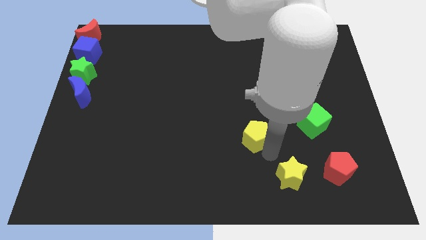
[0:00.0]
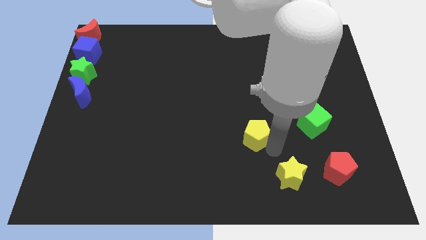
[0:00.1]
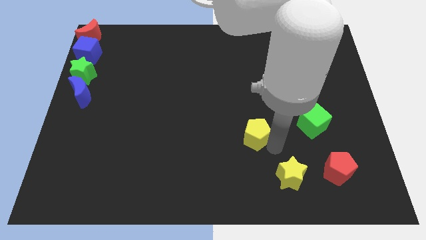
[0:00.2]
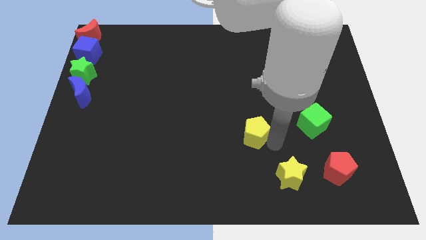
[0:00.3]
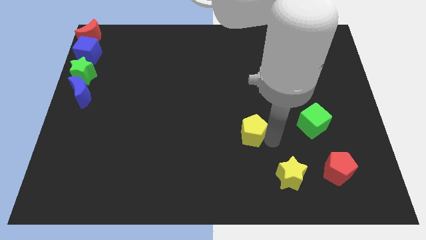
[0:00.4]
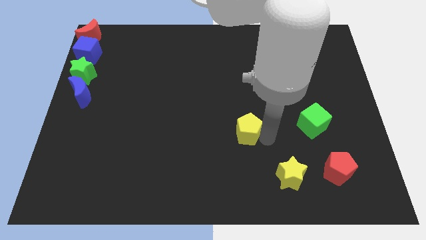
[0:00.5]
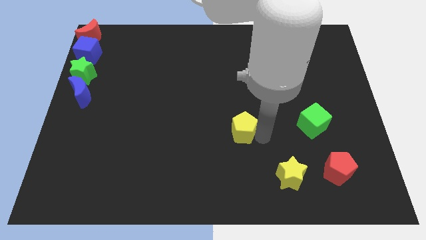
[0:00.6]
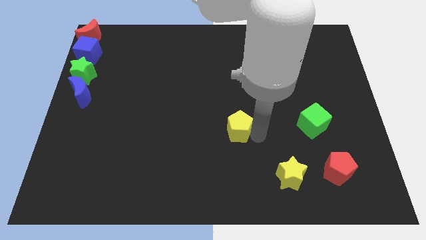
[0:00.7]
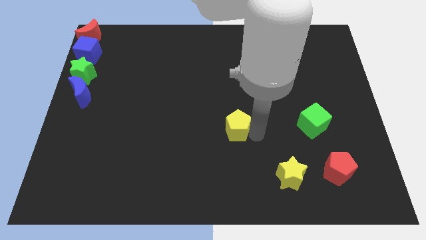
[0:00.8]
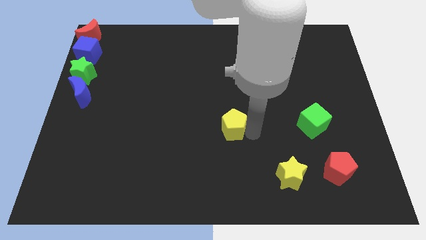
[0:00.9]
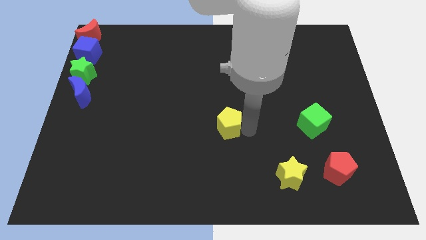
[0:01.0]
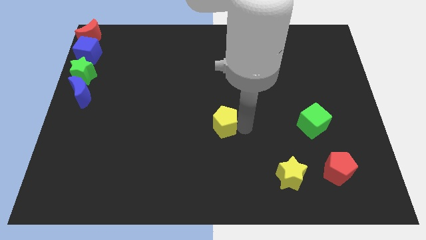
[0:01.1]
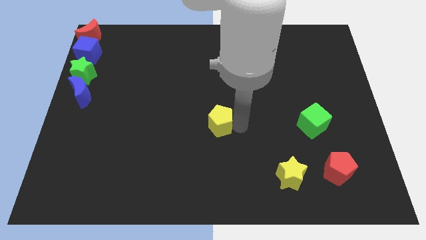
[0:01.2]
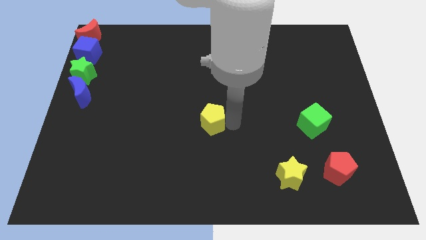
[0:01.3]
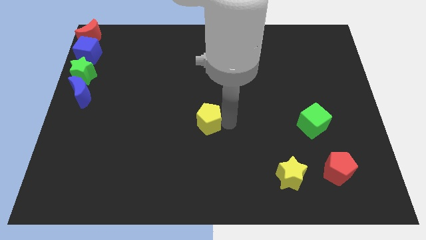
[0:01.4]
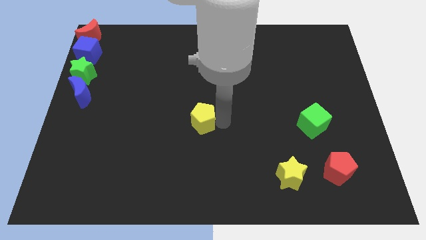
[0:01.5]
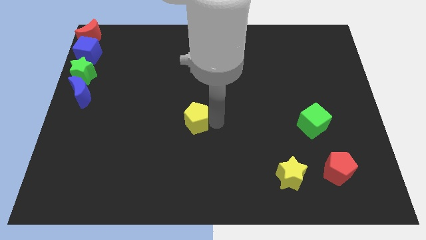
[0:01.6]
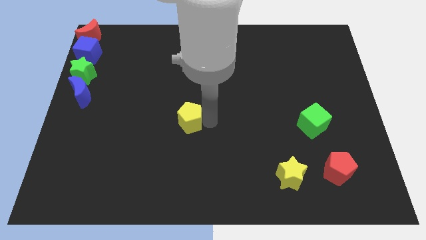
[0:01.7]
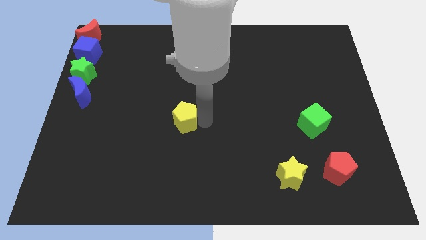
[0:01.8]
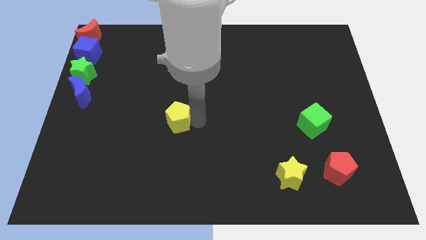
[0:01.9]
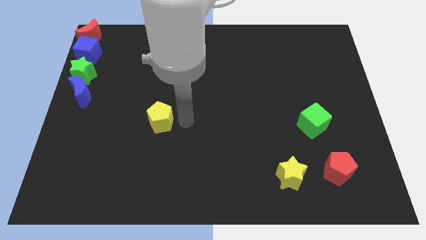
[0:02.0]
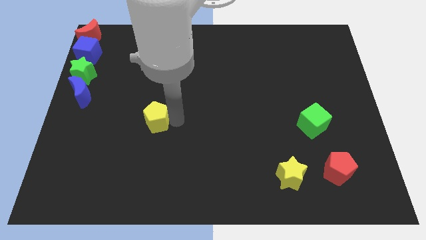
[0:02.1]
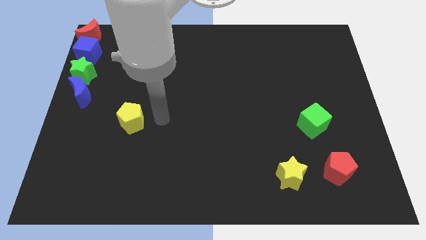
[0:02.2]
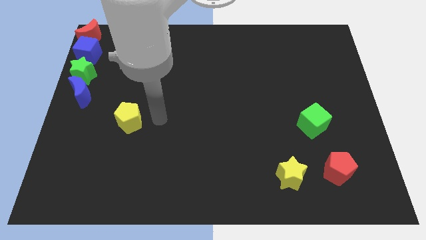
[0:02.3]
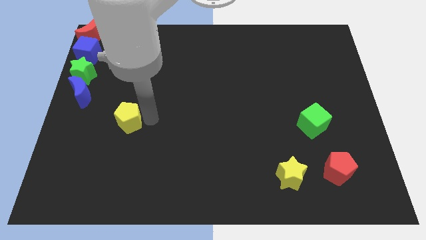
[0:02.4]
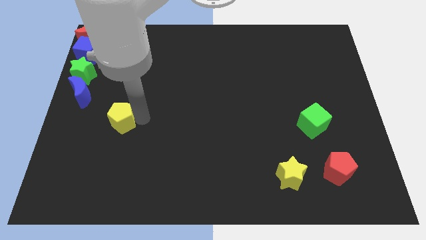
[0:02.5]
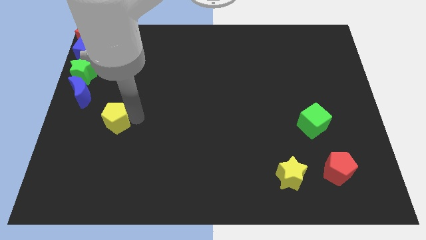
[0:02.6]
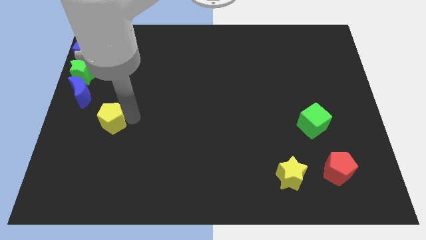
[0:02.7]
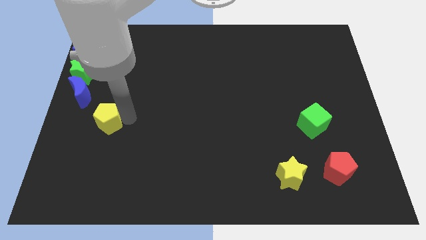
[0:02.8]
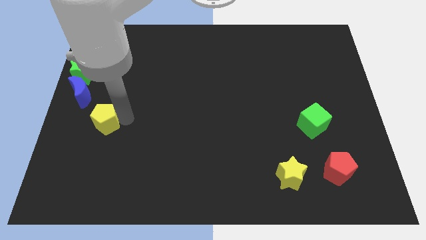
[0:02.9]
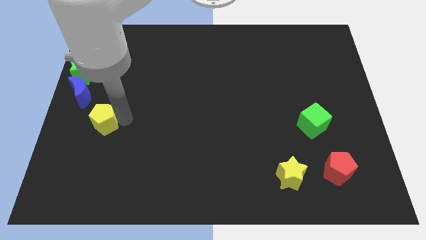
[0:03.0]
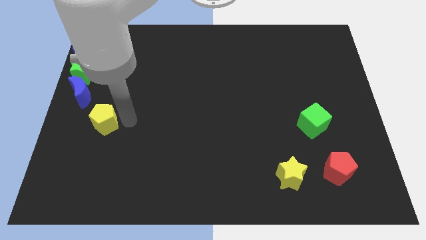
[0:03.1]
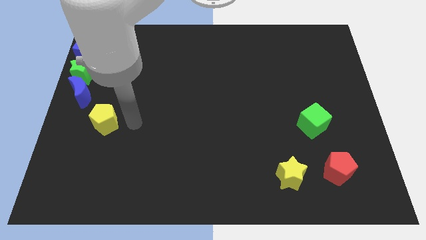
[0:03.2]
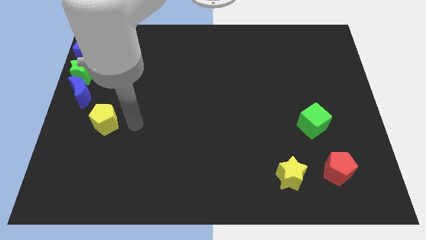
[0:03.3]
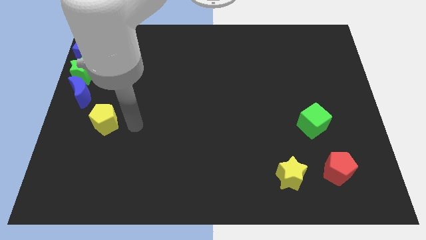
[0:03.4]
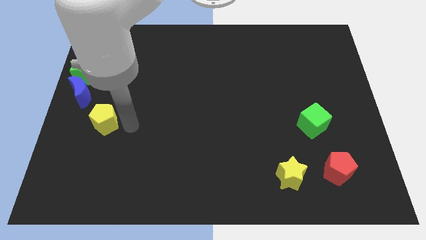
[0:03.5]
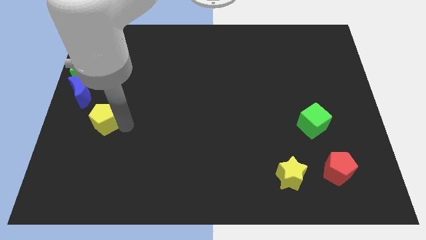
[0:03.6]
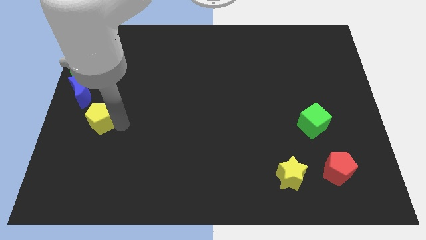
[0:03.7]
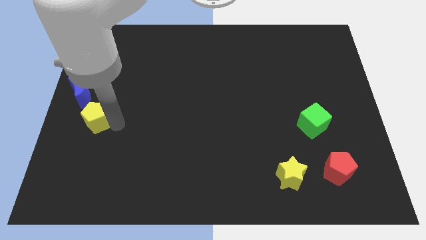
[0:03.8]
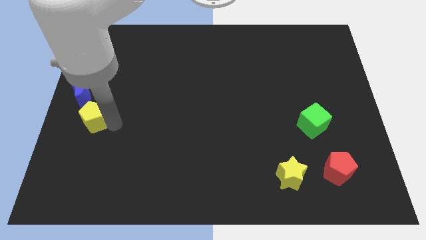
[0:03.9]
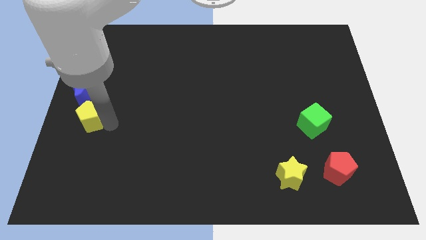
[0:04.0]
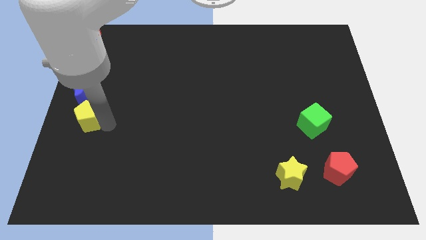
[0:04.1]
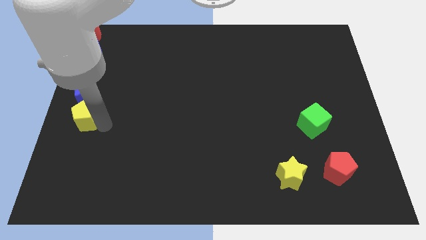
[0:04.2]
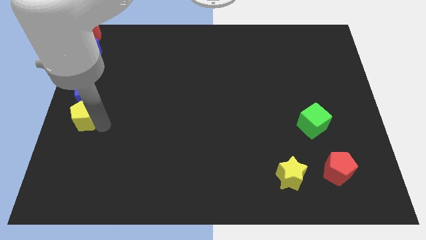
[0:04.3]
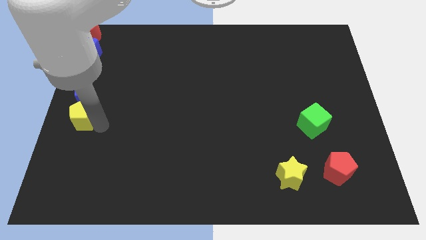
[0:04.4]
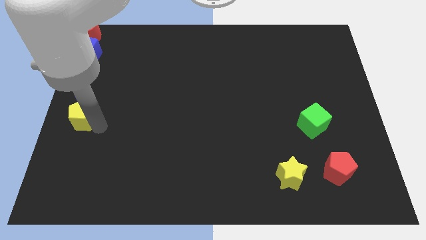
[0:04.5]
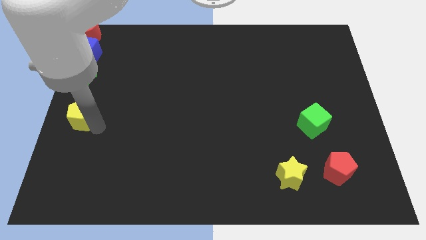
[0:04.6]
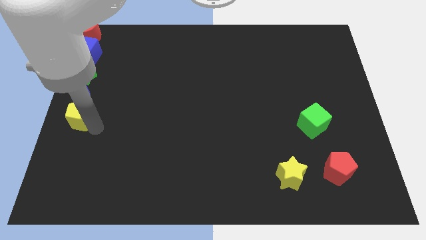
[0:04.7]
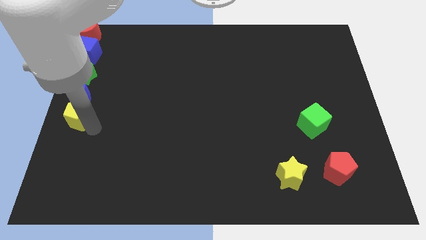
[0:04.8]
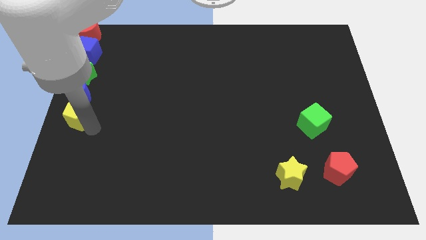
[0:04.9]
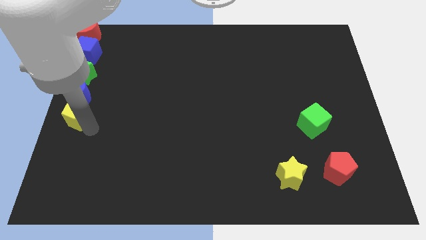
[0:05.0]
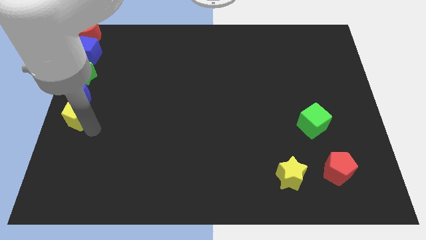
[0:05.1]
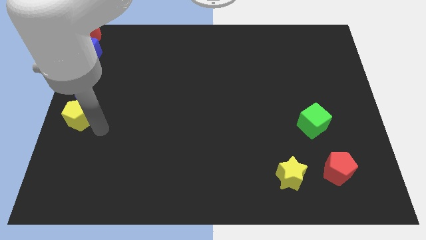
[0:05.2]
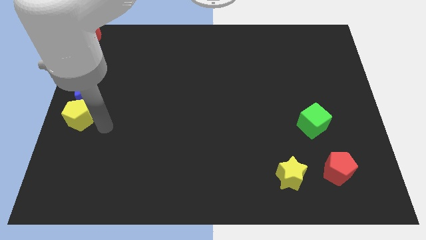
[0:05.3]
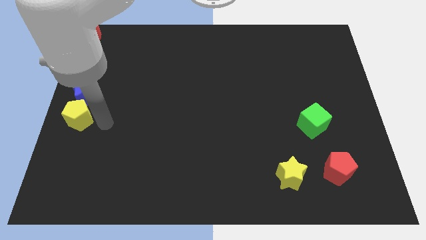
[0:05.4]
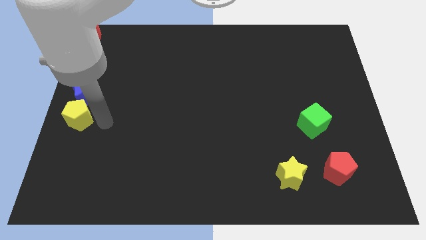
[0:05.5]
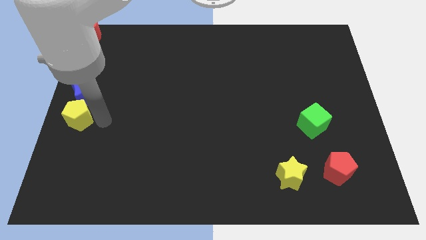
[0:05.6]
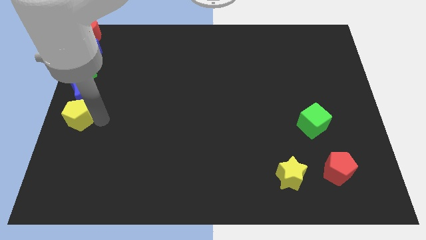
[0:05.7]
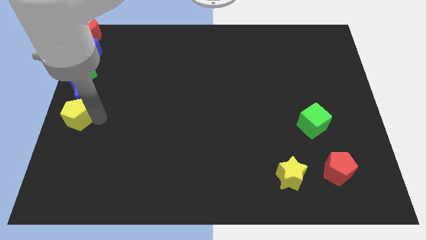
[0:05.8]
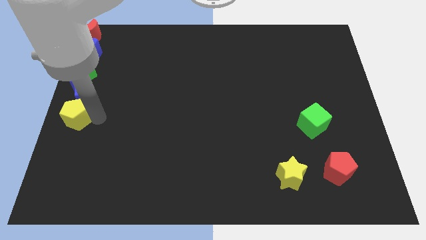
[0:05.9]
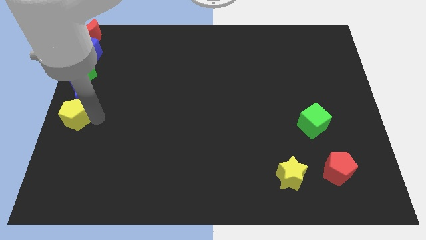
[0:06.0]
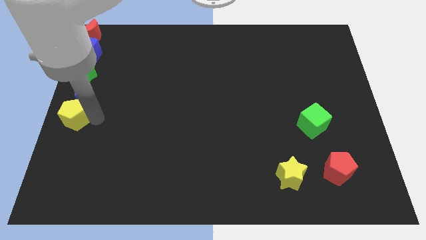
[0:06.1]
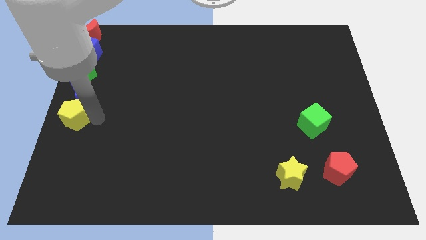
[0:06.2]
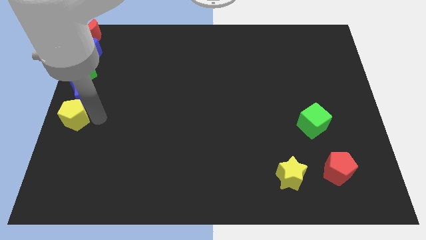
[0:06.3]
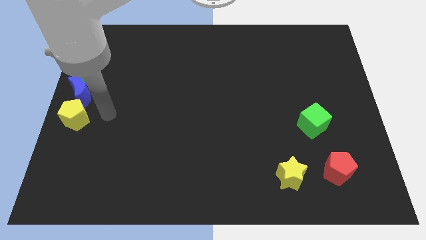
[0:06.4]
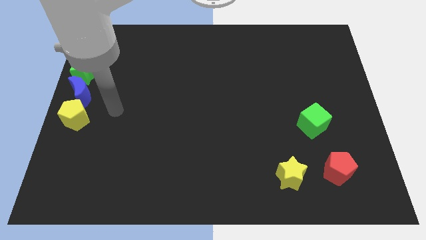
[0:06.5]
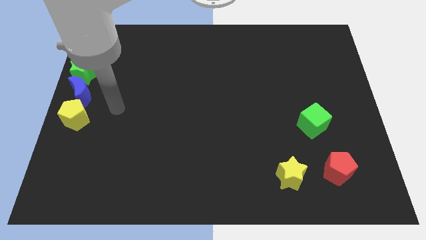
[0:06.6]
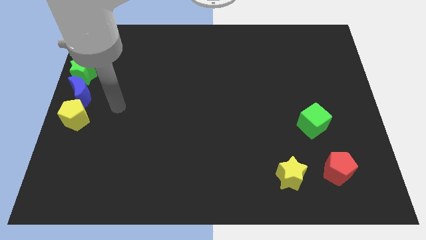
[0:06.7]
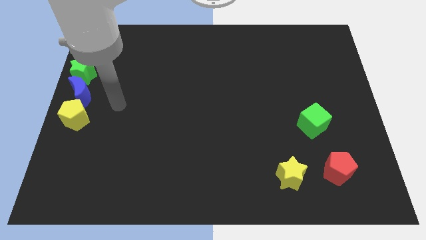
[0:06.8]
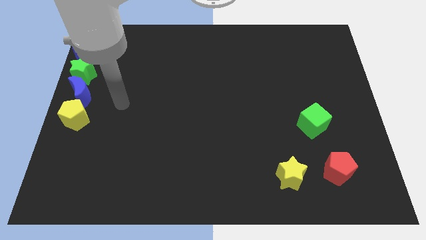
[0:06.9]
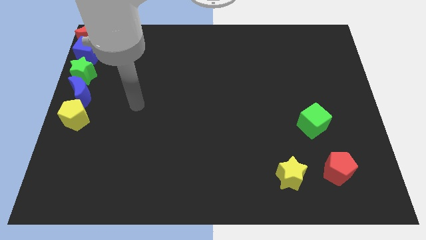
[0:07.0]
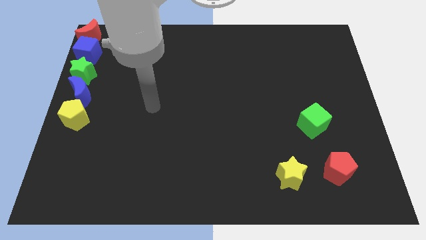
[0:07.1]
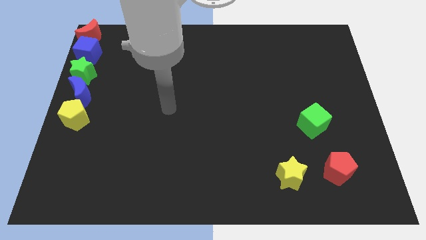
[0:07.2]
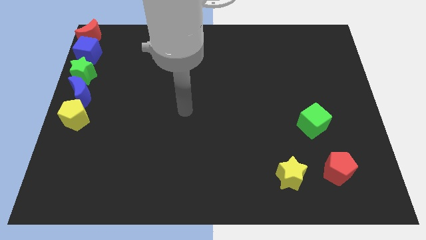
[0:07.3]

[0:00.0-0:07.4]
place the yellow pentagon below the blue moon

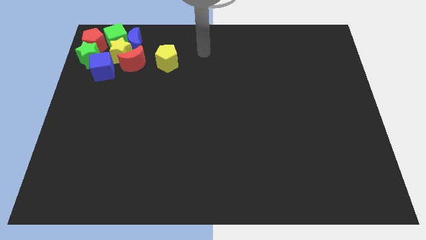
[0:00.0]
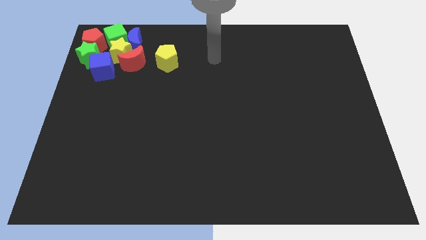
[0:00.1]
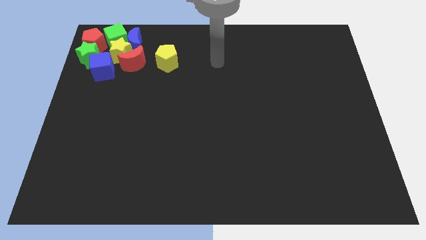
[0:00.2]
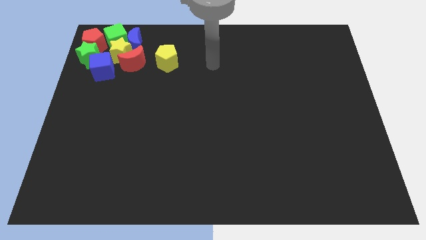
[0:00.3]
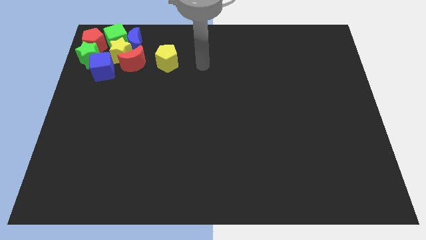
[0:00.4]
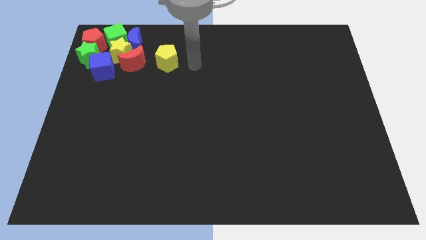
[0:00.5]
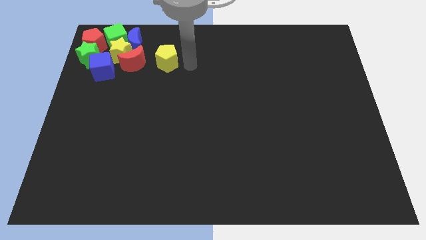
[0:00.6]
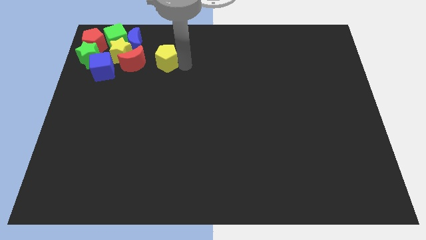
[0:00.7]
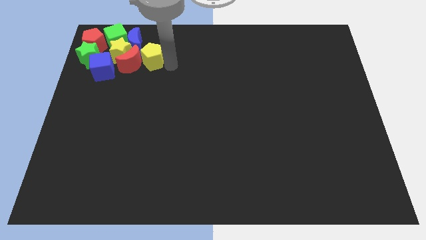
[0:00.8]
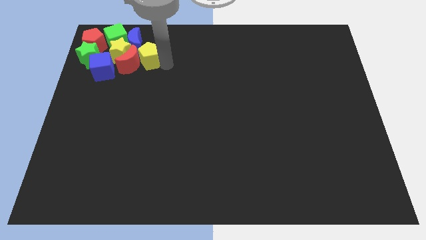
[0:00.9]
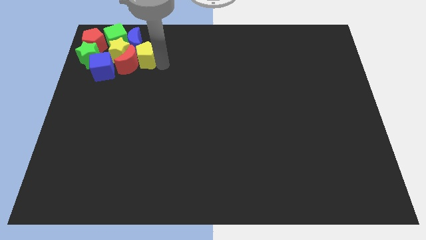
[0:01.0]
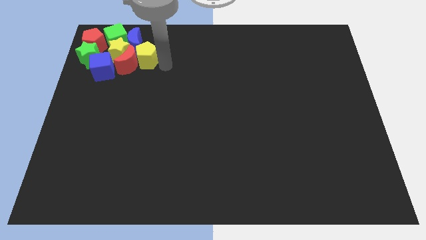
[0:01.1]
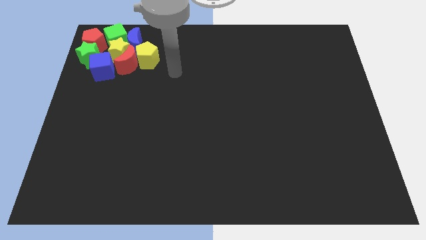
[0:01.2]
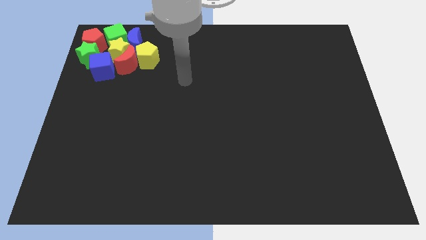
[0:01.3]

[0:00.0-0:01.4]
move the yellow pentagon to the group of blocks

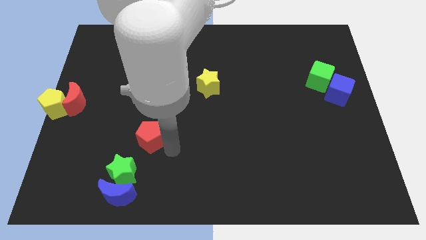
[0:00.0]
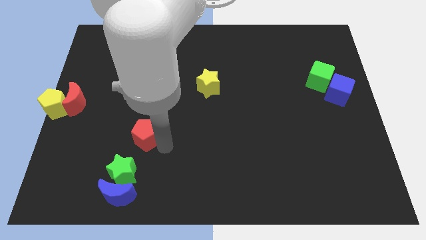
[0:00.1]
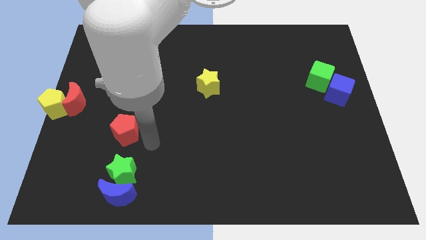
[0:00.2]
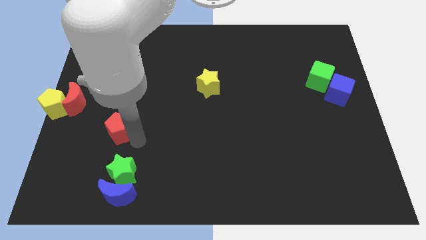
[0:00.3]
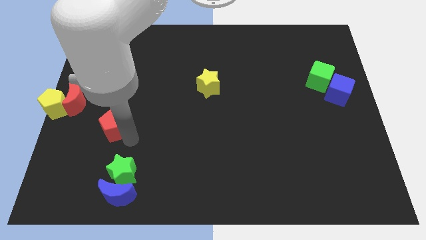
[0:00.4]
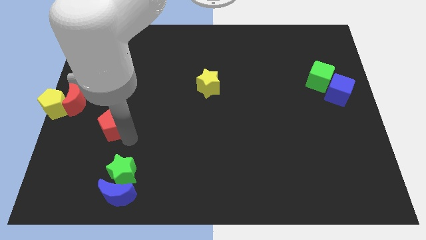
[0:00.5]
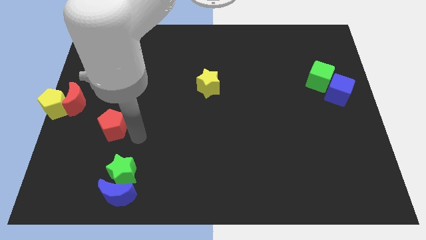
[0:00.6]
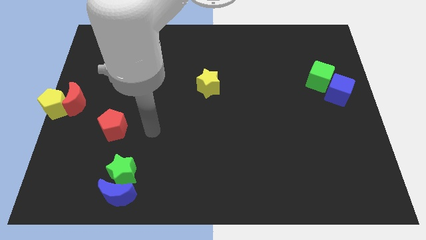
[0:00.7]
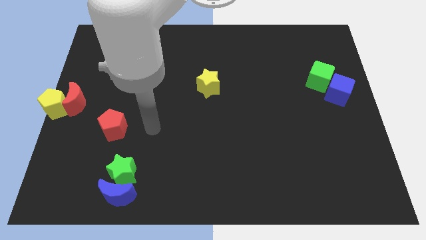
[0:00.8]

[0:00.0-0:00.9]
push the red object into the left center corner
